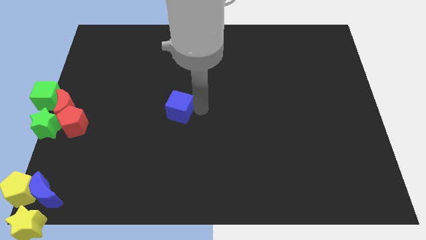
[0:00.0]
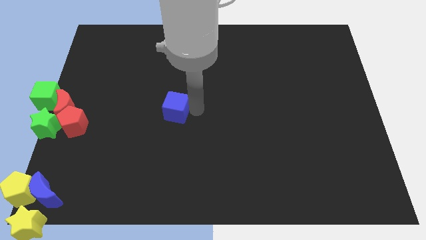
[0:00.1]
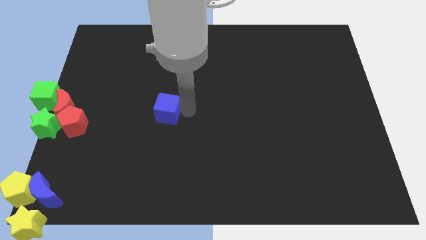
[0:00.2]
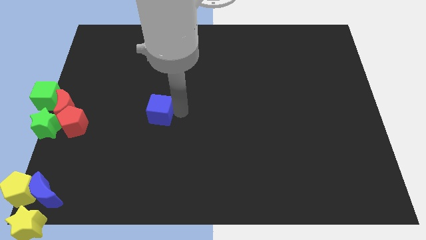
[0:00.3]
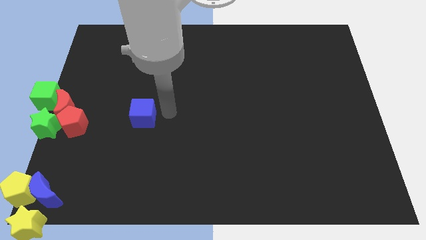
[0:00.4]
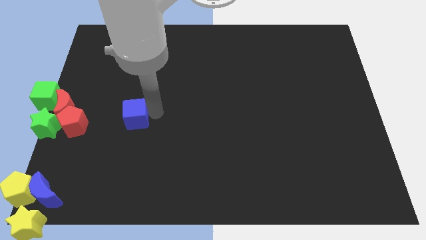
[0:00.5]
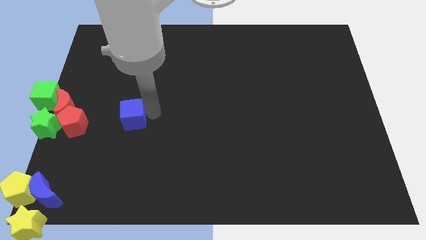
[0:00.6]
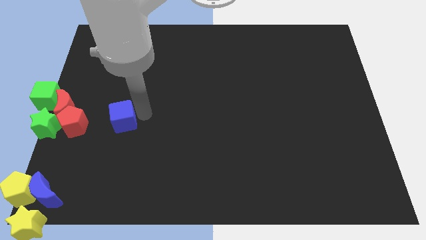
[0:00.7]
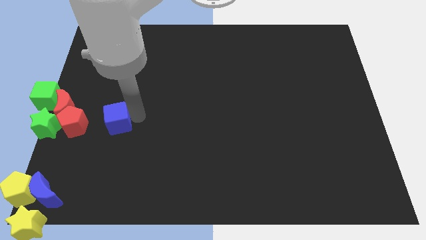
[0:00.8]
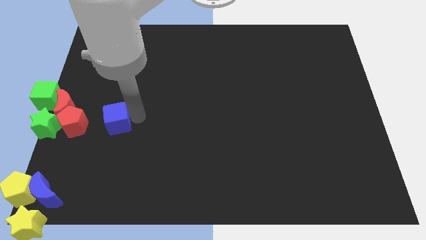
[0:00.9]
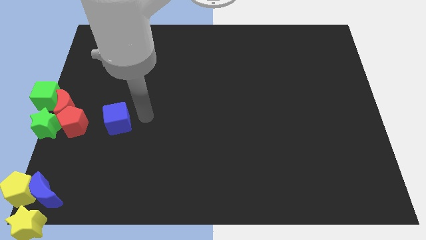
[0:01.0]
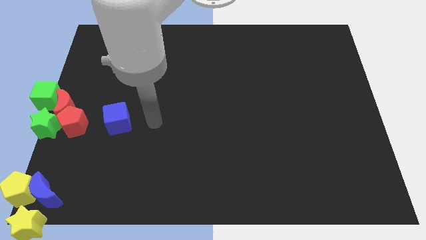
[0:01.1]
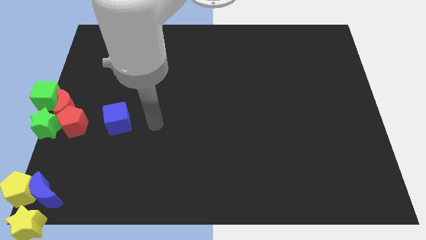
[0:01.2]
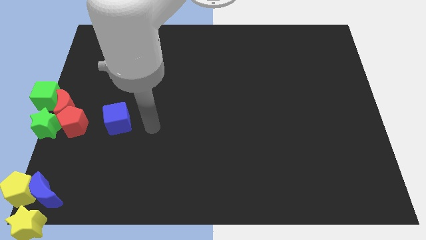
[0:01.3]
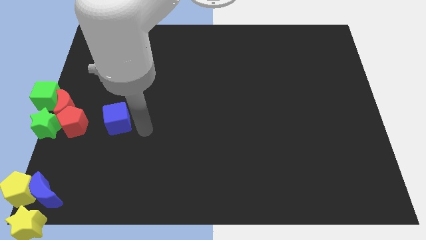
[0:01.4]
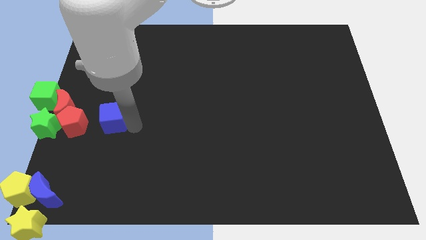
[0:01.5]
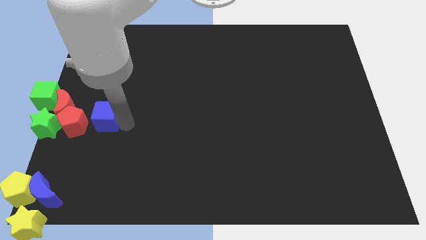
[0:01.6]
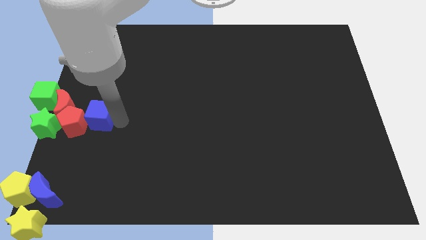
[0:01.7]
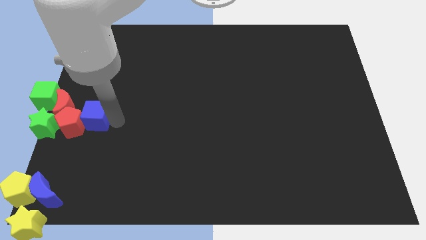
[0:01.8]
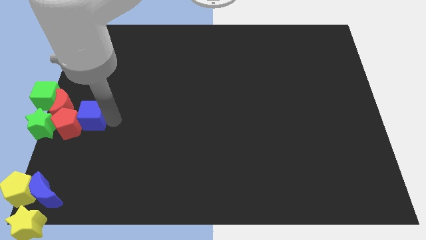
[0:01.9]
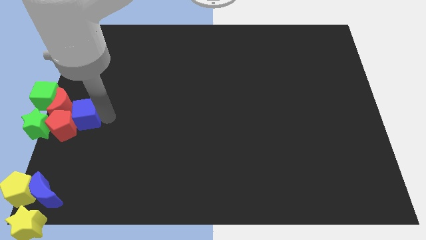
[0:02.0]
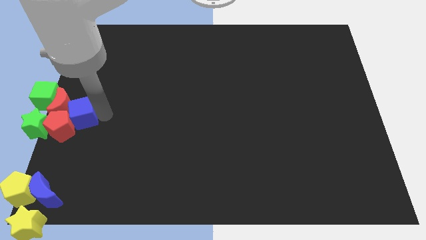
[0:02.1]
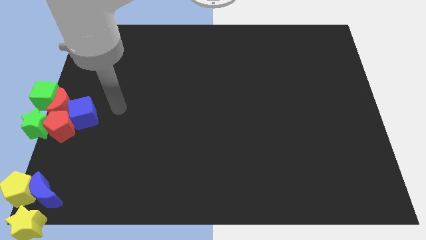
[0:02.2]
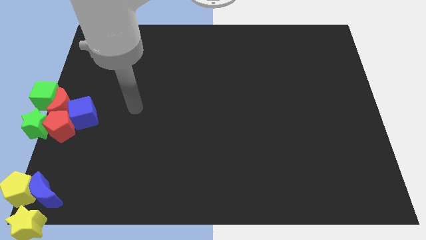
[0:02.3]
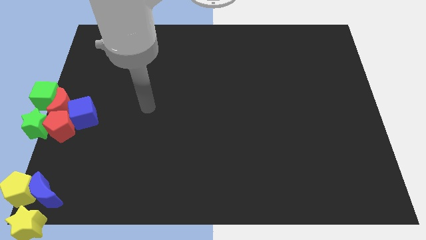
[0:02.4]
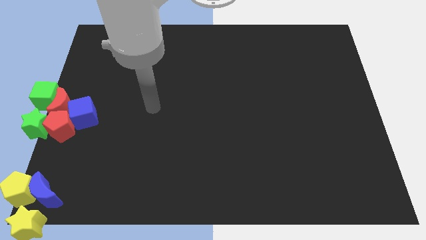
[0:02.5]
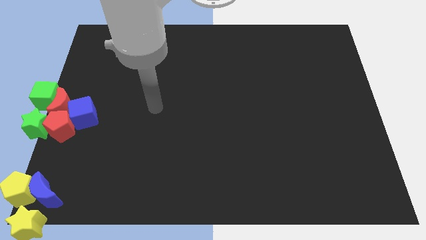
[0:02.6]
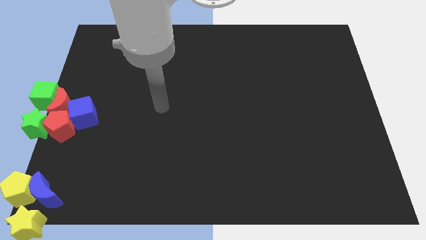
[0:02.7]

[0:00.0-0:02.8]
move blue cube into group of blocks

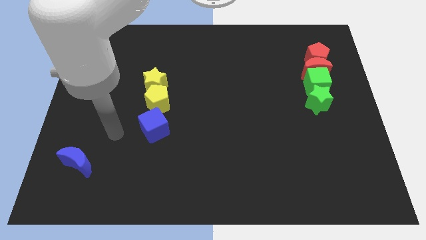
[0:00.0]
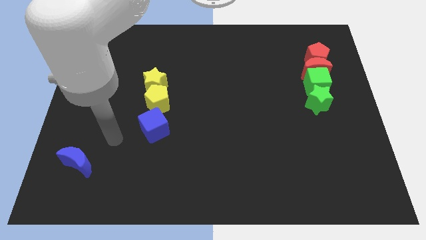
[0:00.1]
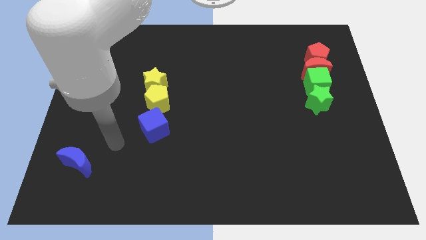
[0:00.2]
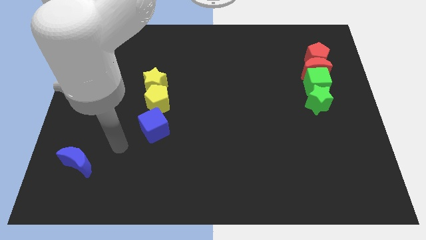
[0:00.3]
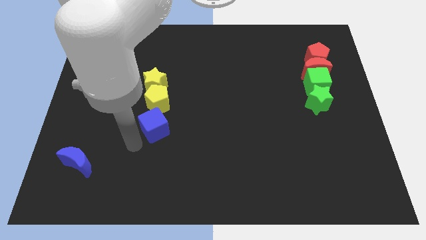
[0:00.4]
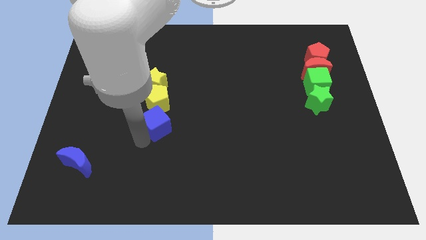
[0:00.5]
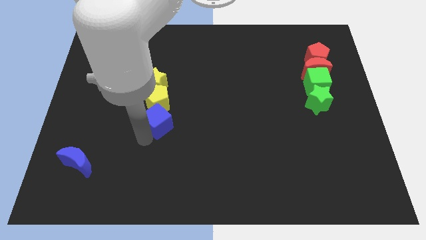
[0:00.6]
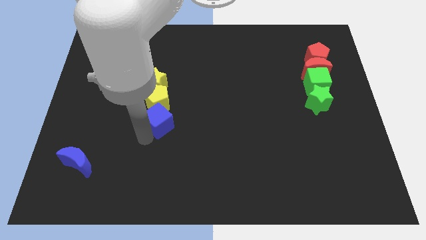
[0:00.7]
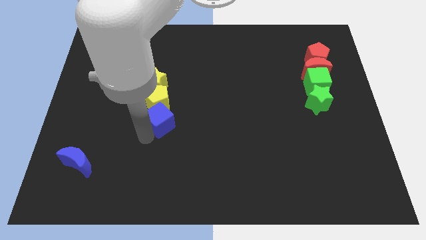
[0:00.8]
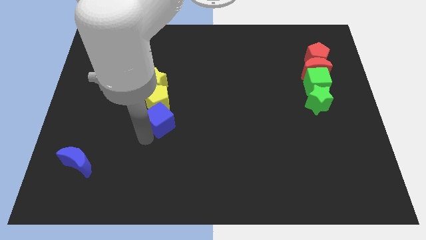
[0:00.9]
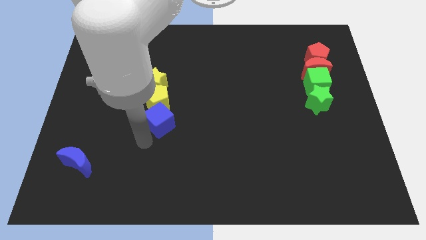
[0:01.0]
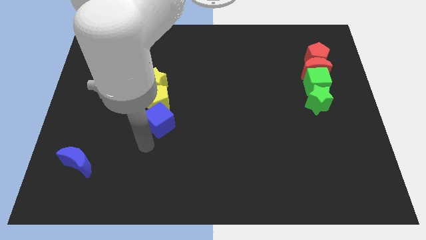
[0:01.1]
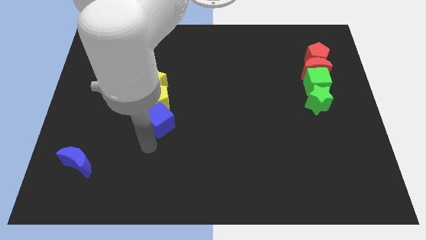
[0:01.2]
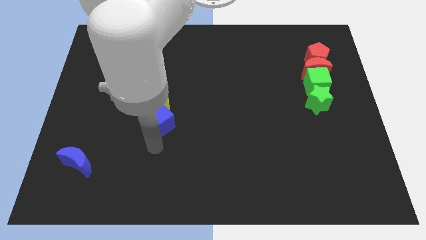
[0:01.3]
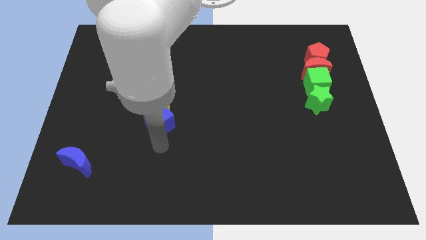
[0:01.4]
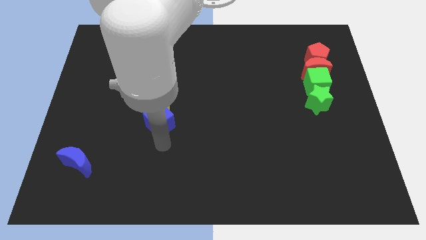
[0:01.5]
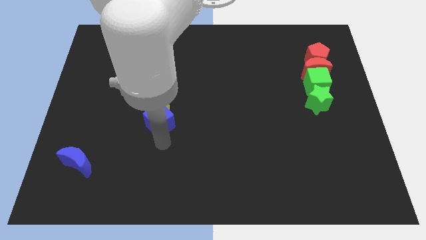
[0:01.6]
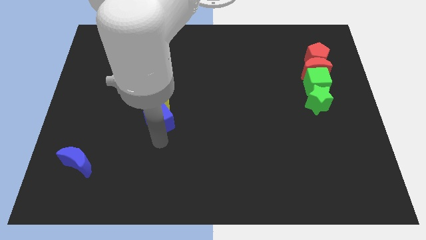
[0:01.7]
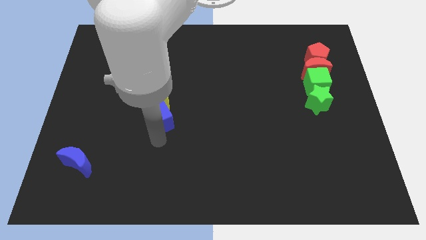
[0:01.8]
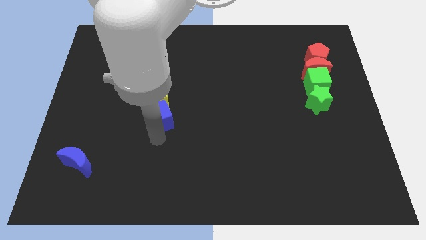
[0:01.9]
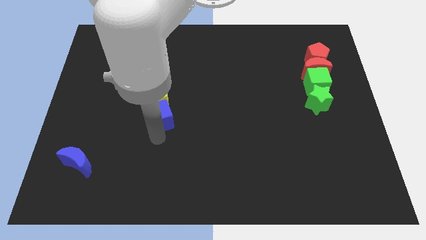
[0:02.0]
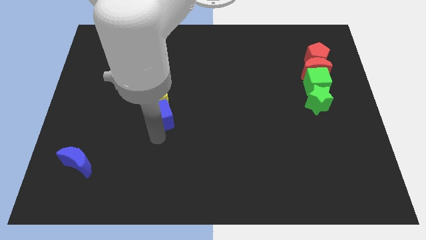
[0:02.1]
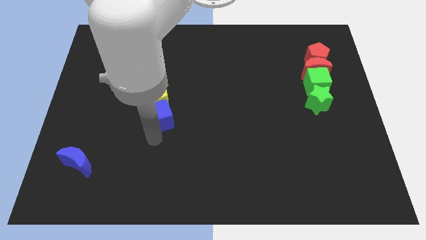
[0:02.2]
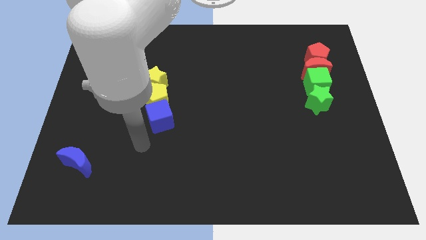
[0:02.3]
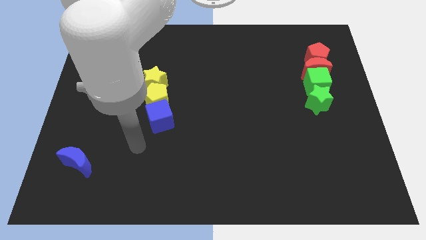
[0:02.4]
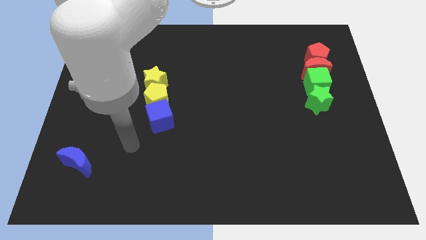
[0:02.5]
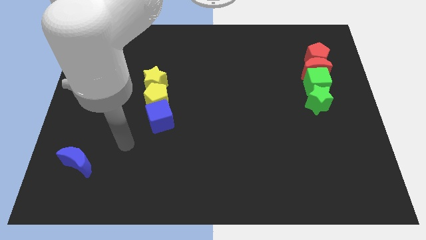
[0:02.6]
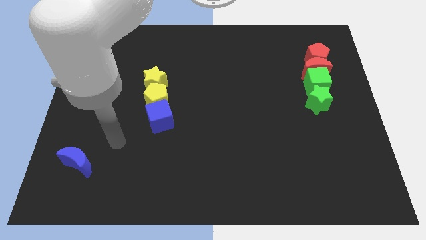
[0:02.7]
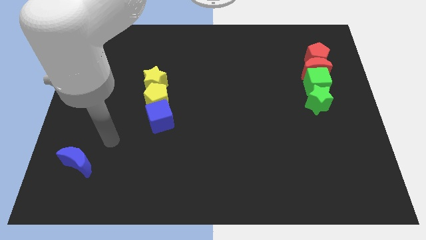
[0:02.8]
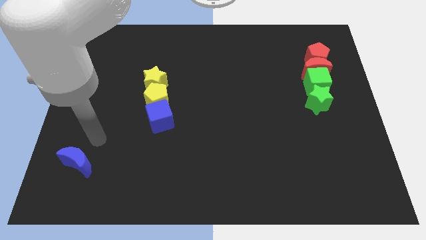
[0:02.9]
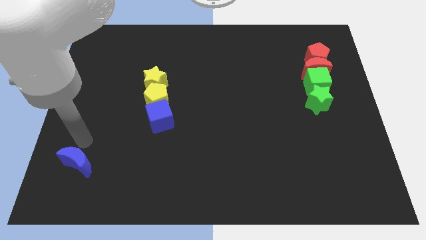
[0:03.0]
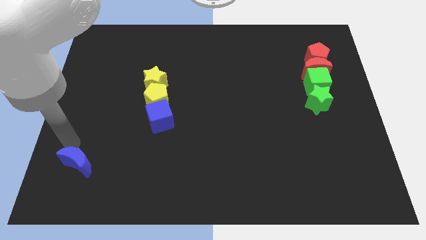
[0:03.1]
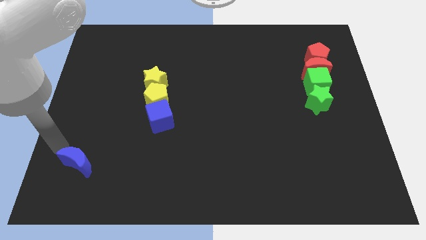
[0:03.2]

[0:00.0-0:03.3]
place your arm above blue crescent

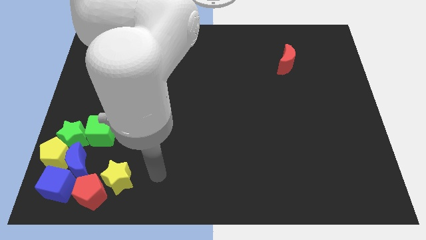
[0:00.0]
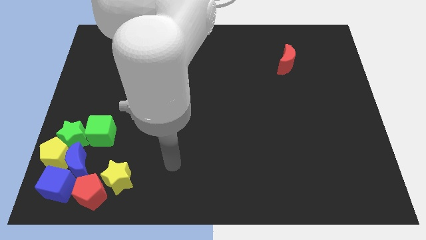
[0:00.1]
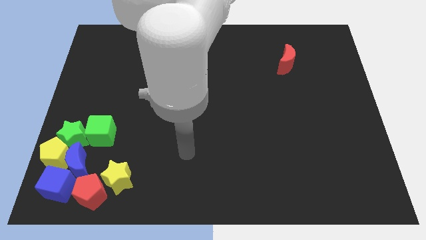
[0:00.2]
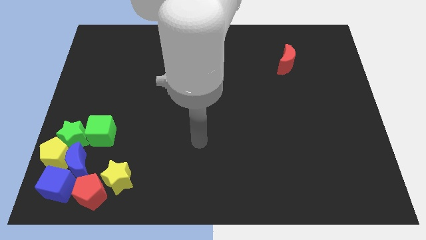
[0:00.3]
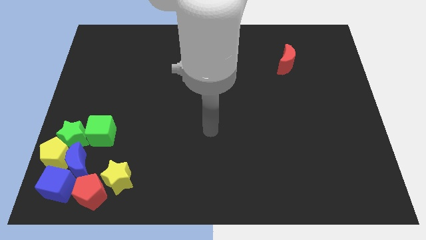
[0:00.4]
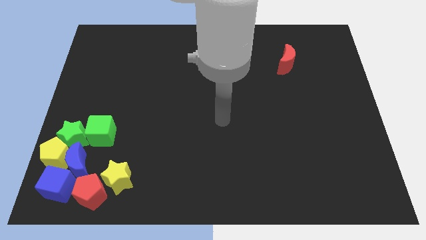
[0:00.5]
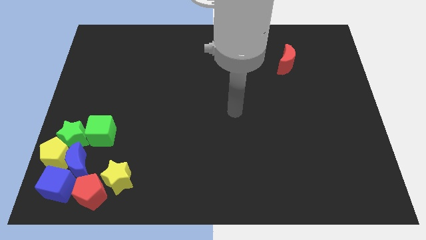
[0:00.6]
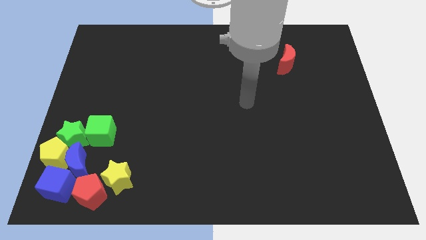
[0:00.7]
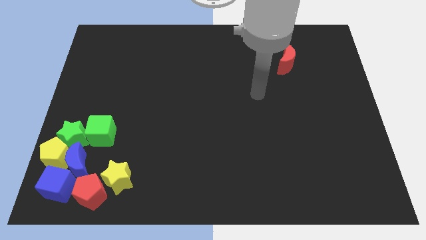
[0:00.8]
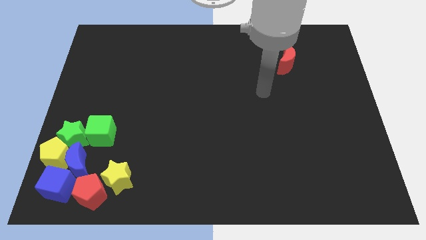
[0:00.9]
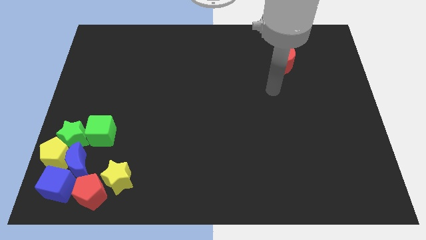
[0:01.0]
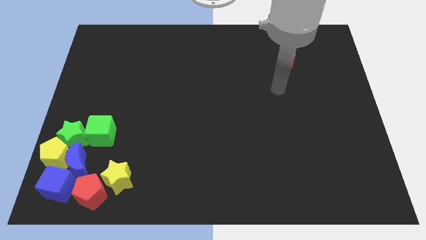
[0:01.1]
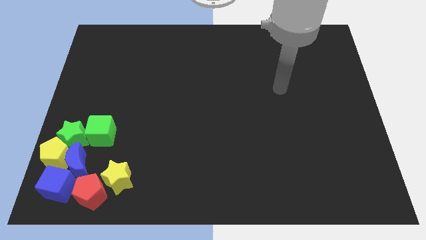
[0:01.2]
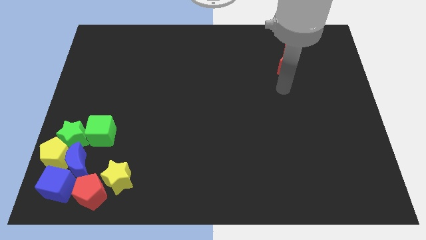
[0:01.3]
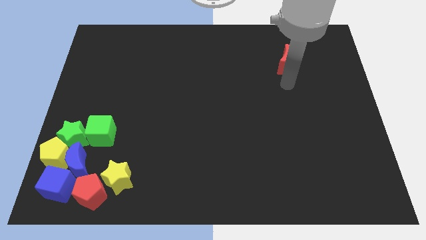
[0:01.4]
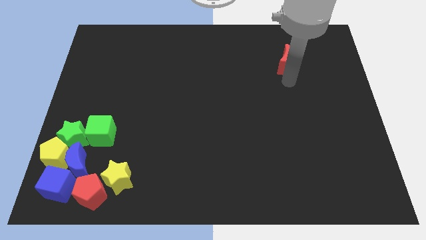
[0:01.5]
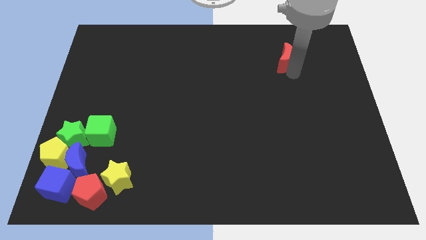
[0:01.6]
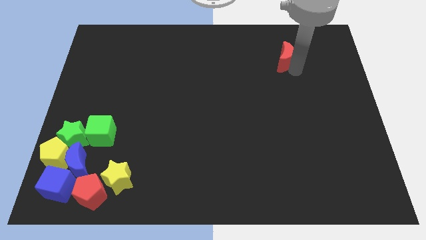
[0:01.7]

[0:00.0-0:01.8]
move the arm from bottom left to the right to the red crescent

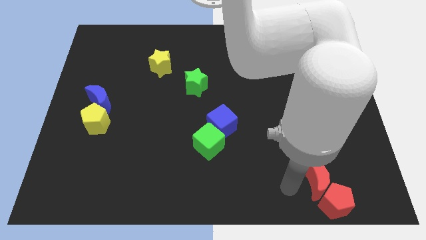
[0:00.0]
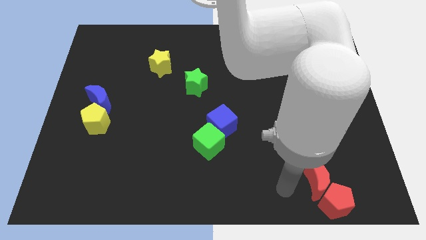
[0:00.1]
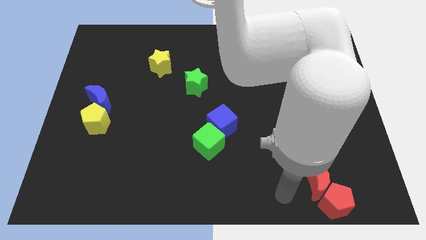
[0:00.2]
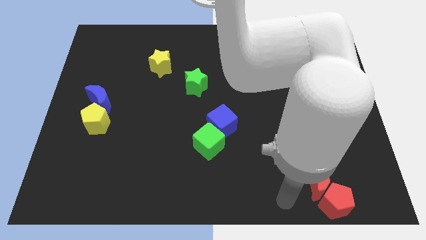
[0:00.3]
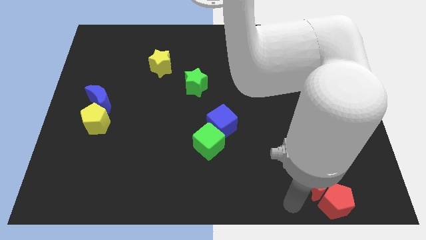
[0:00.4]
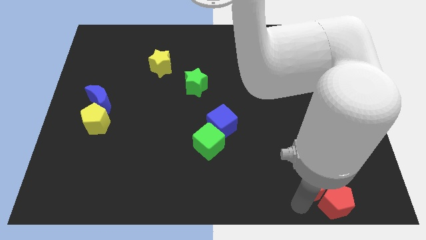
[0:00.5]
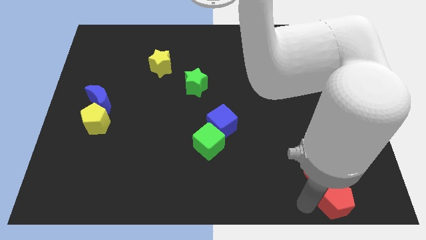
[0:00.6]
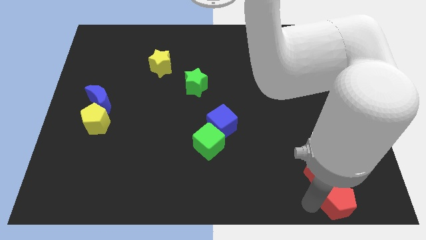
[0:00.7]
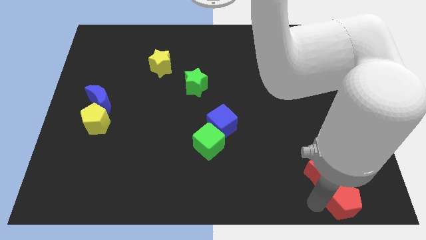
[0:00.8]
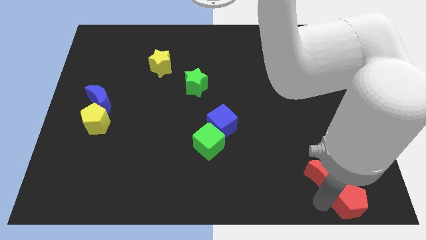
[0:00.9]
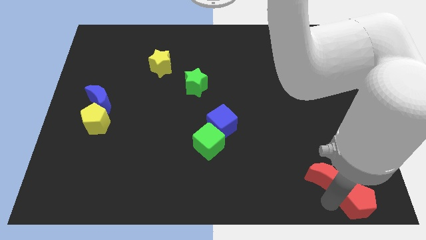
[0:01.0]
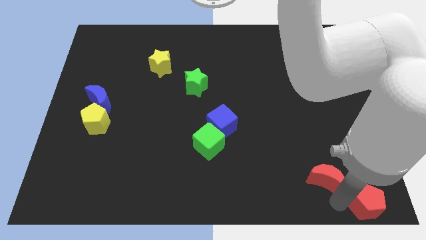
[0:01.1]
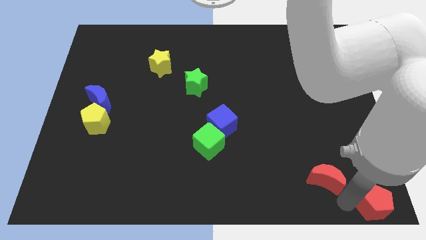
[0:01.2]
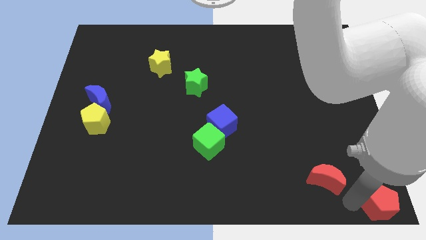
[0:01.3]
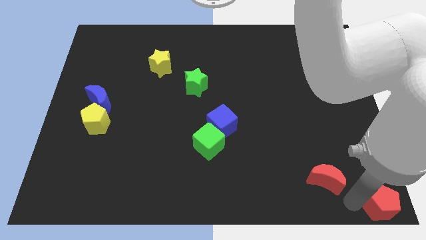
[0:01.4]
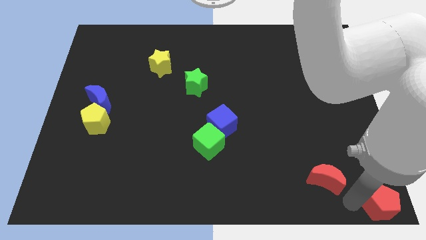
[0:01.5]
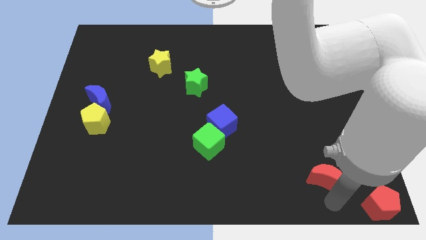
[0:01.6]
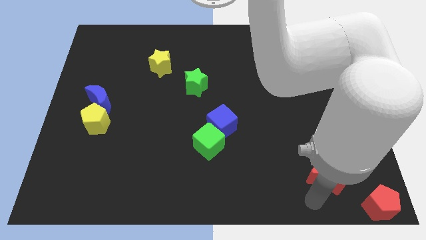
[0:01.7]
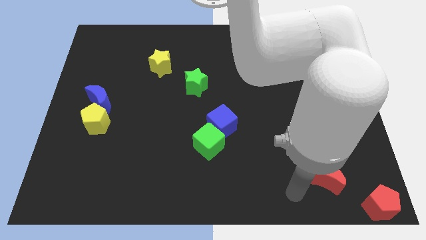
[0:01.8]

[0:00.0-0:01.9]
place the red pentagon at the bottom right corner of the board
